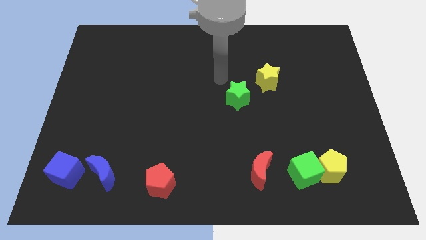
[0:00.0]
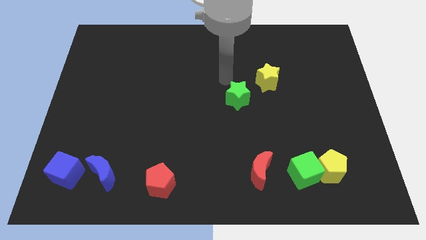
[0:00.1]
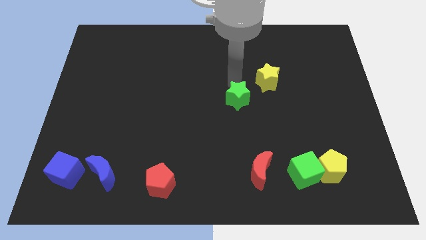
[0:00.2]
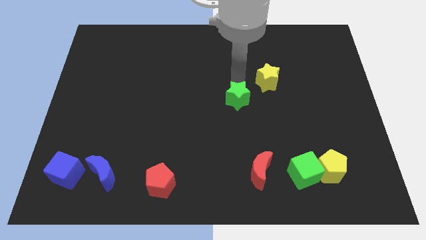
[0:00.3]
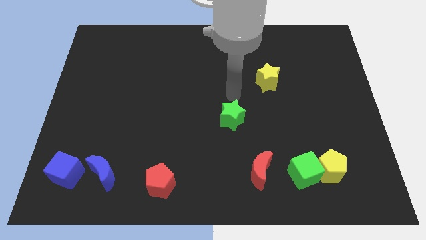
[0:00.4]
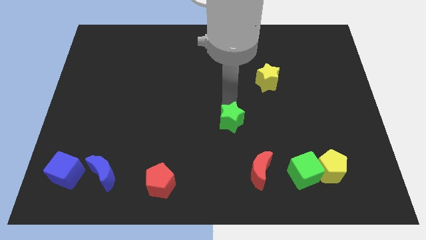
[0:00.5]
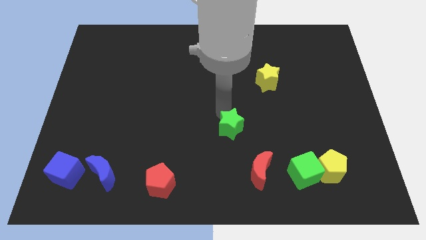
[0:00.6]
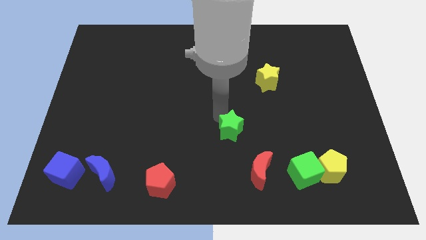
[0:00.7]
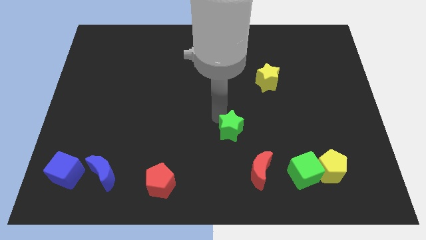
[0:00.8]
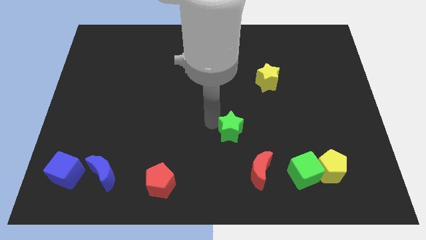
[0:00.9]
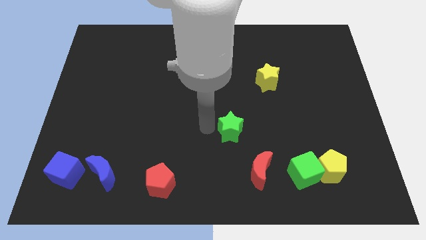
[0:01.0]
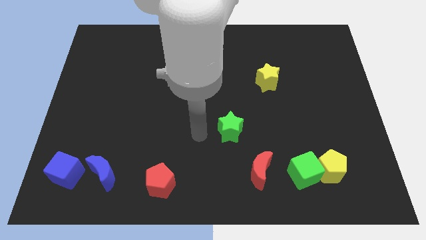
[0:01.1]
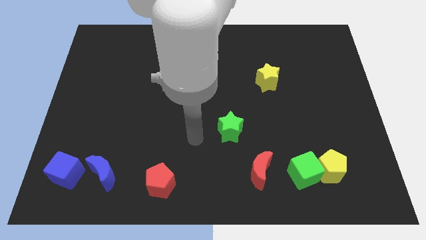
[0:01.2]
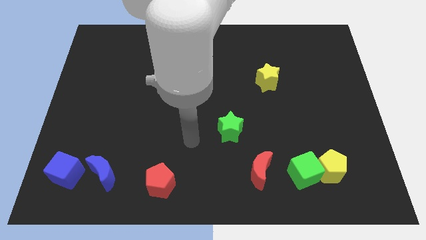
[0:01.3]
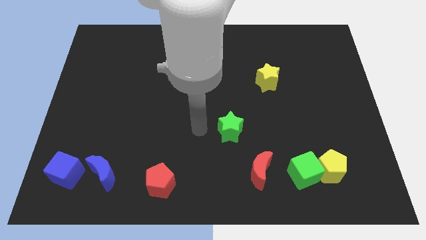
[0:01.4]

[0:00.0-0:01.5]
move the green star away from the yellow star

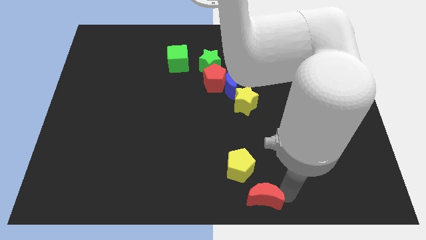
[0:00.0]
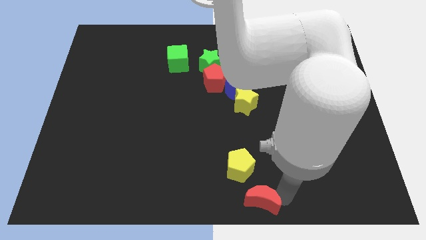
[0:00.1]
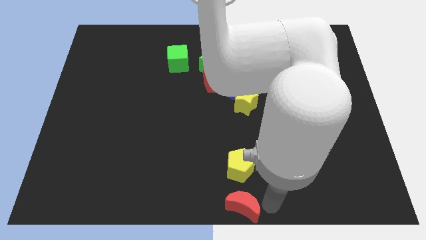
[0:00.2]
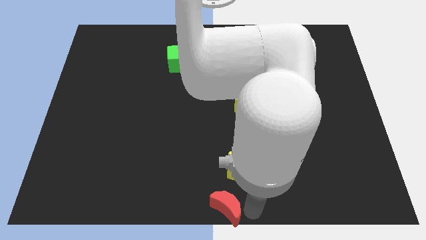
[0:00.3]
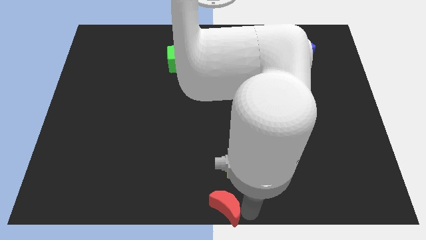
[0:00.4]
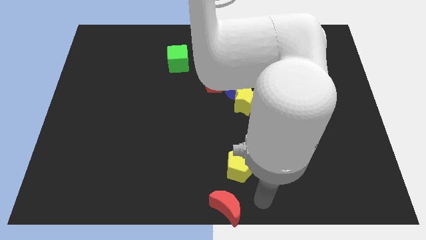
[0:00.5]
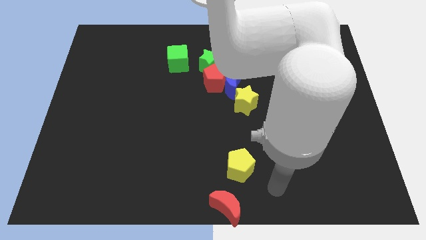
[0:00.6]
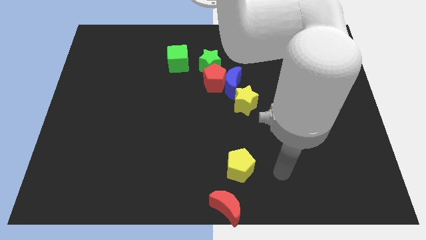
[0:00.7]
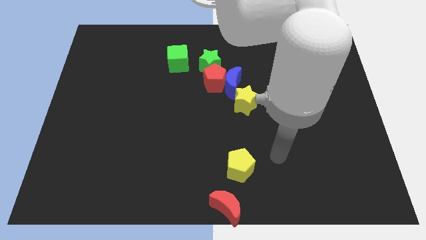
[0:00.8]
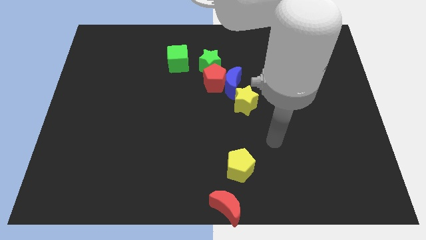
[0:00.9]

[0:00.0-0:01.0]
put the red moon at the bottom center of the board

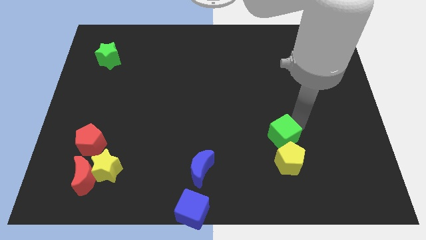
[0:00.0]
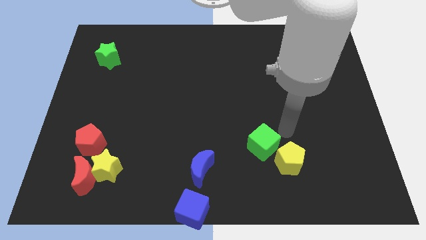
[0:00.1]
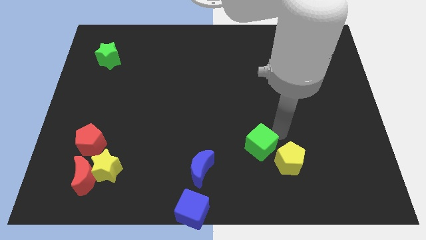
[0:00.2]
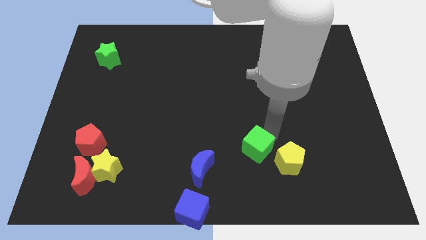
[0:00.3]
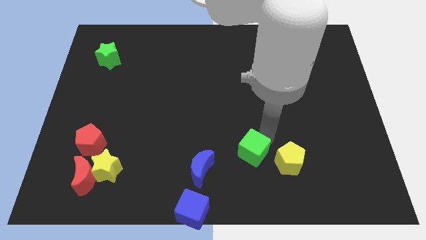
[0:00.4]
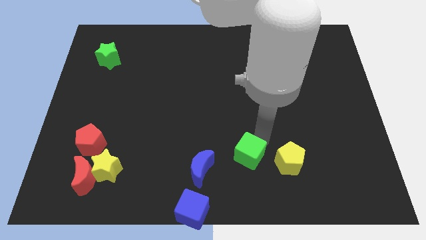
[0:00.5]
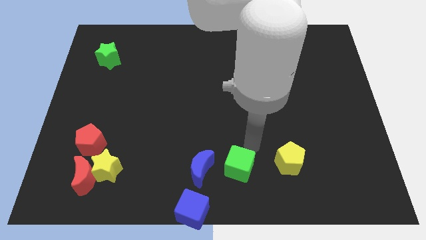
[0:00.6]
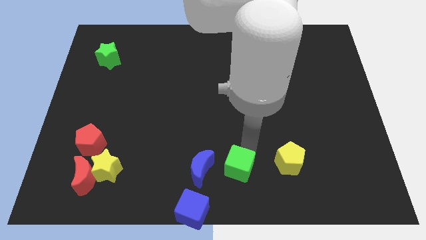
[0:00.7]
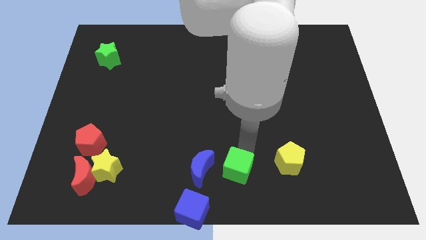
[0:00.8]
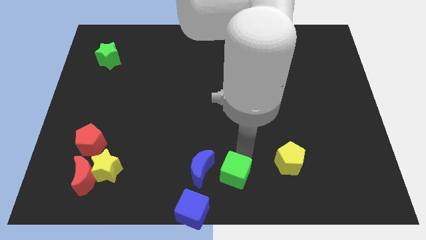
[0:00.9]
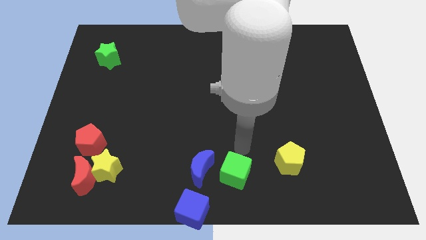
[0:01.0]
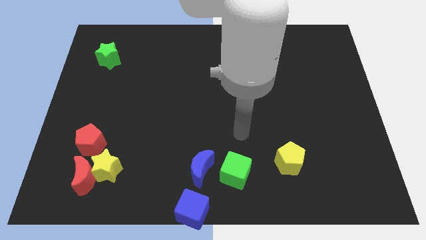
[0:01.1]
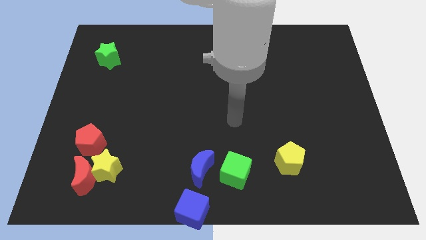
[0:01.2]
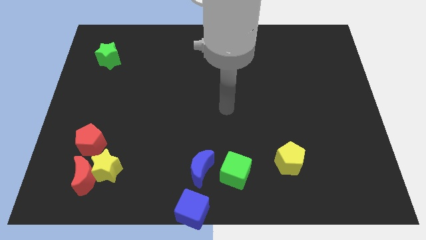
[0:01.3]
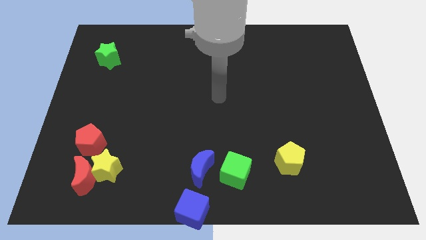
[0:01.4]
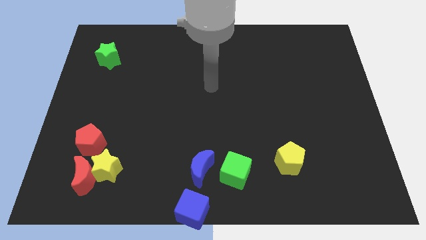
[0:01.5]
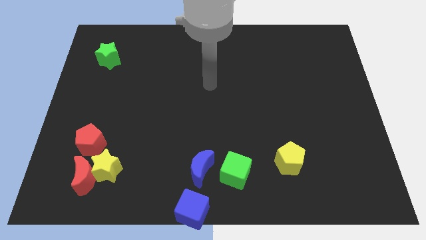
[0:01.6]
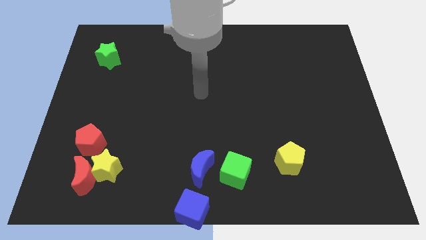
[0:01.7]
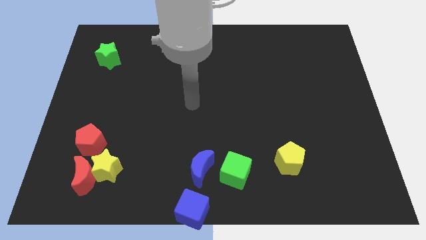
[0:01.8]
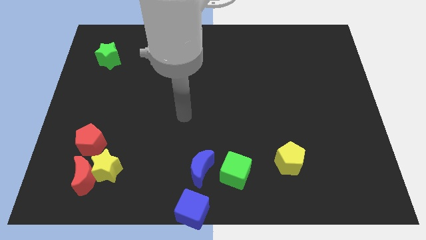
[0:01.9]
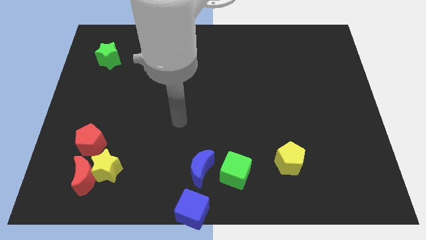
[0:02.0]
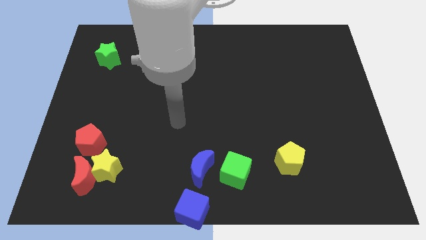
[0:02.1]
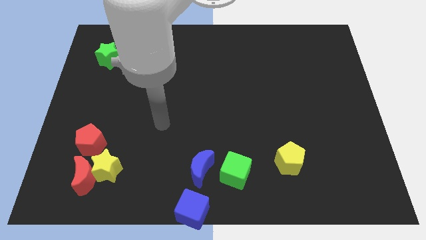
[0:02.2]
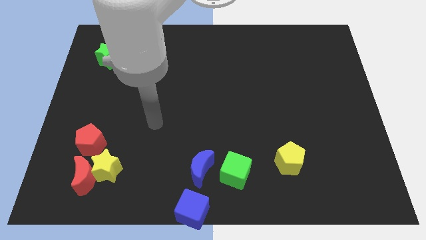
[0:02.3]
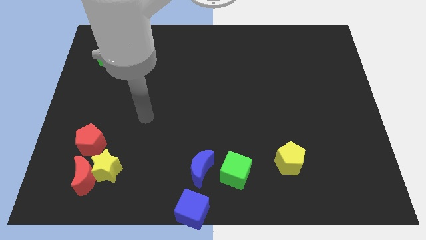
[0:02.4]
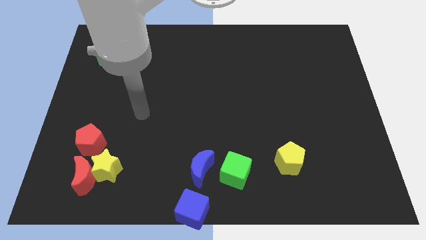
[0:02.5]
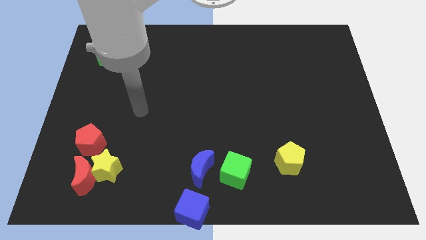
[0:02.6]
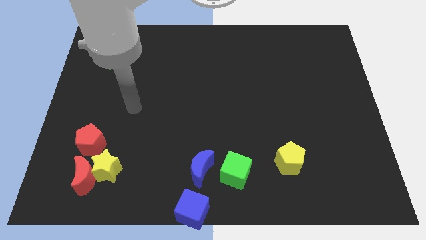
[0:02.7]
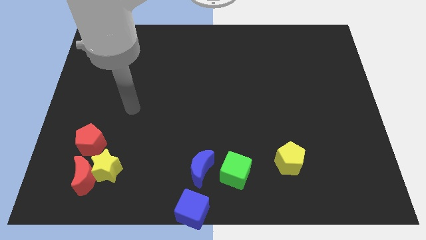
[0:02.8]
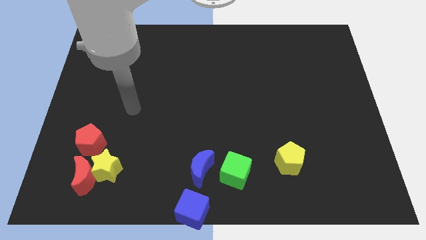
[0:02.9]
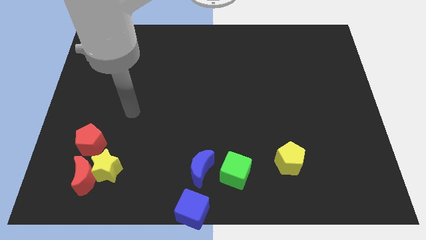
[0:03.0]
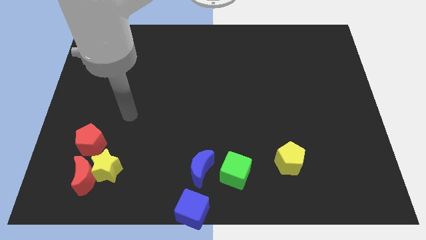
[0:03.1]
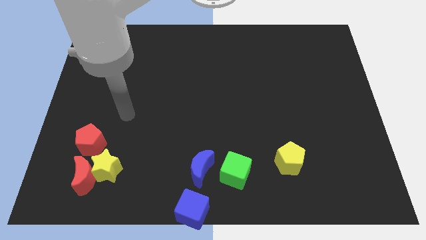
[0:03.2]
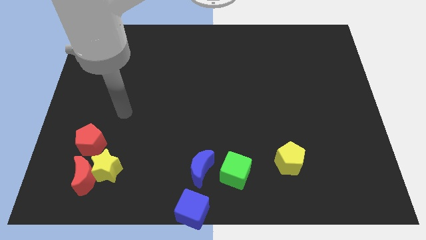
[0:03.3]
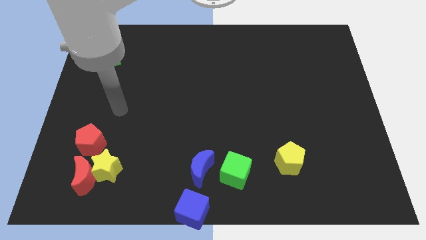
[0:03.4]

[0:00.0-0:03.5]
move the green cube right to the blue crescent

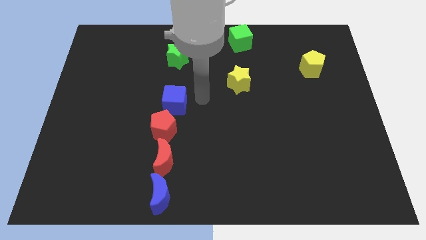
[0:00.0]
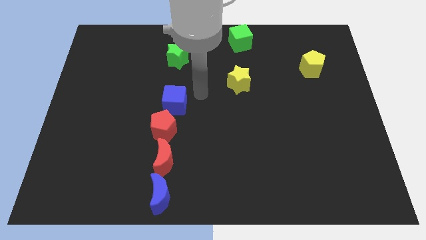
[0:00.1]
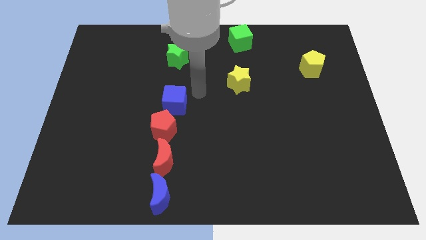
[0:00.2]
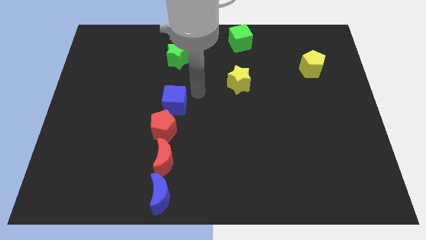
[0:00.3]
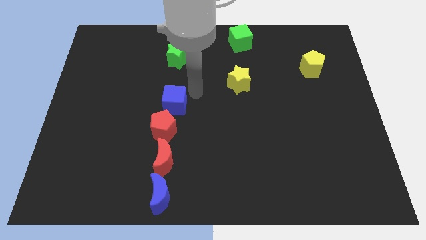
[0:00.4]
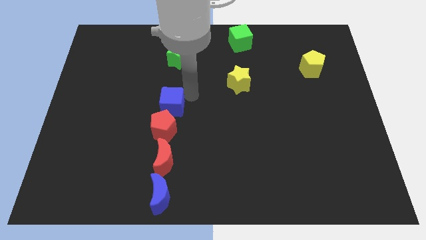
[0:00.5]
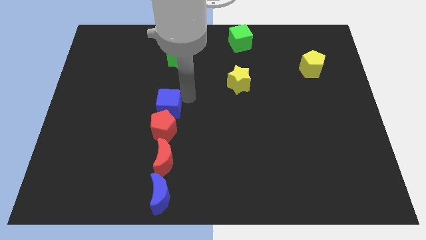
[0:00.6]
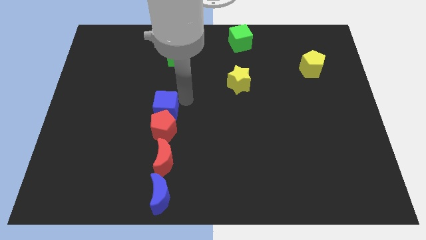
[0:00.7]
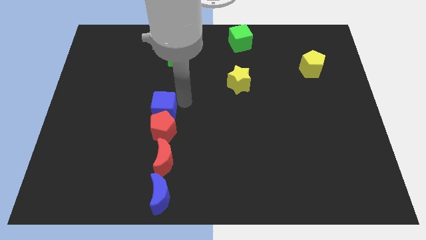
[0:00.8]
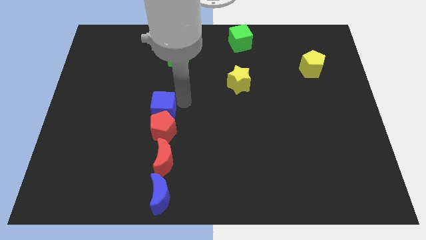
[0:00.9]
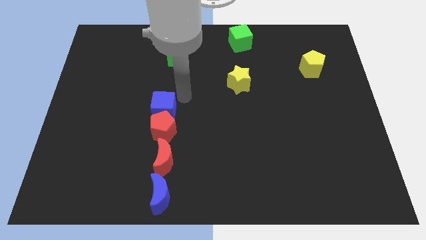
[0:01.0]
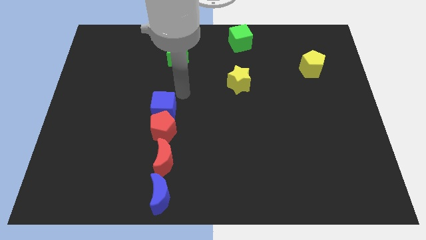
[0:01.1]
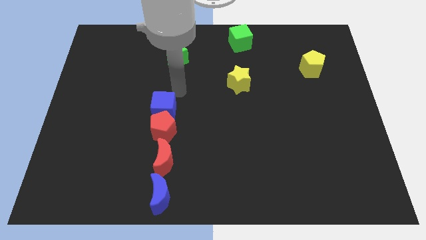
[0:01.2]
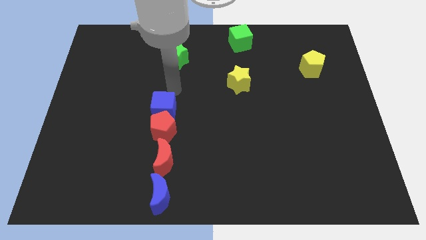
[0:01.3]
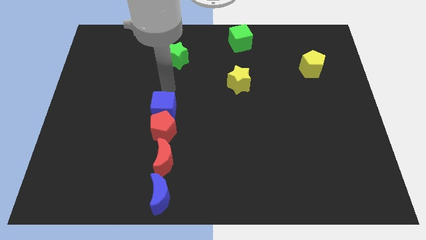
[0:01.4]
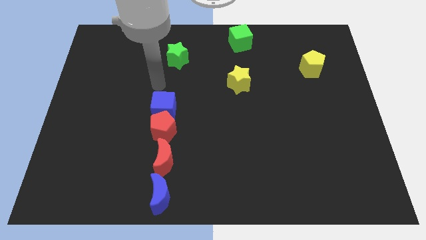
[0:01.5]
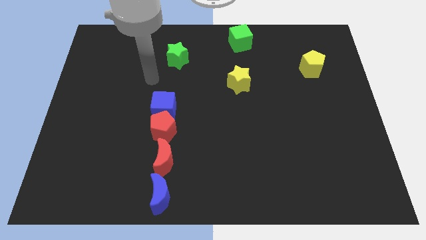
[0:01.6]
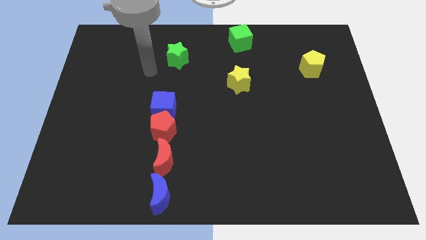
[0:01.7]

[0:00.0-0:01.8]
push blue cube close to red pentagon

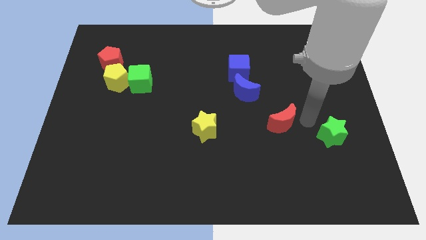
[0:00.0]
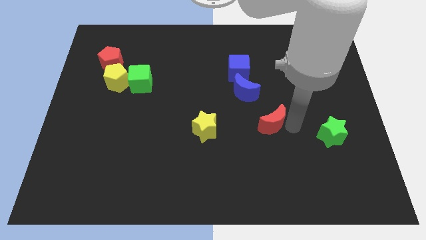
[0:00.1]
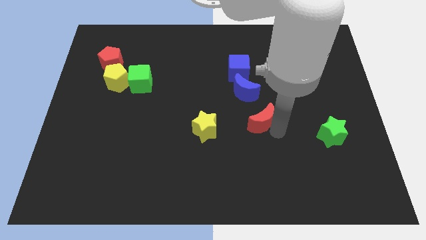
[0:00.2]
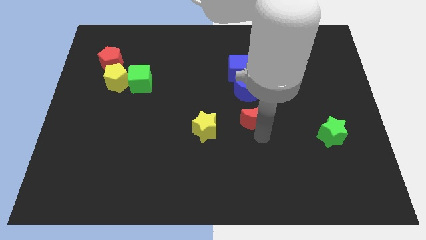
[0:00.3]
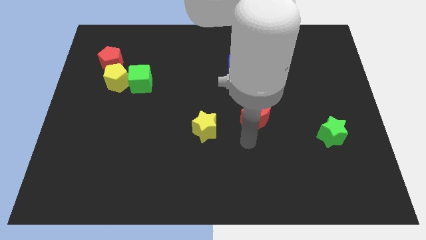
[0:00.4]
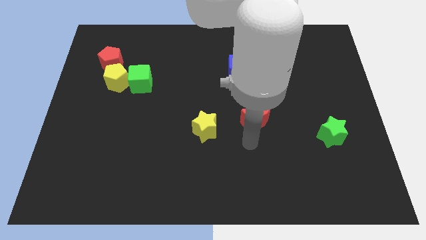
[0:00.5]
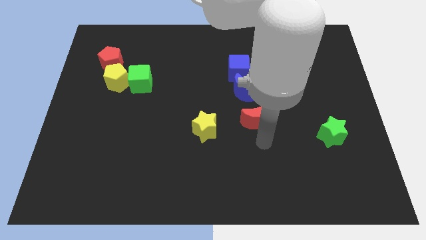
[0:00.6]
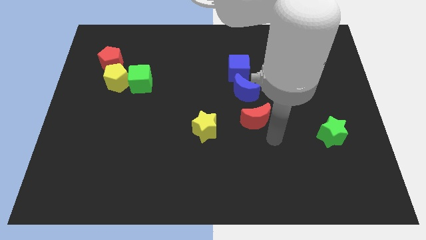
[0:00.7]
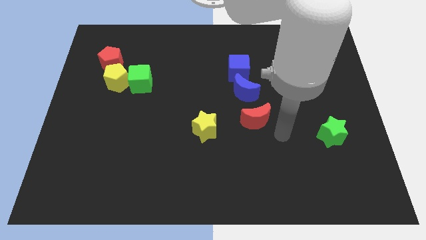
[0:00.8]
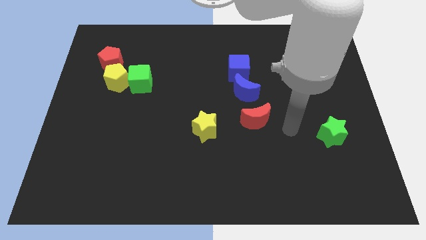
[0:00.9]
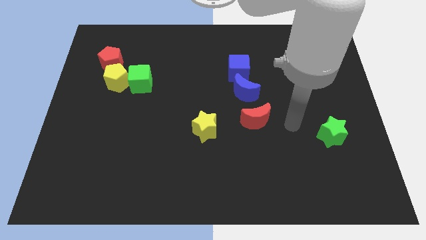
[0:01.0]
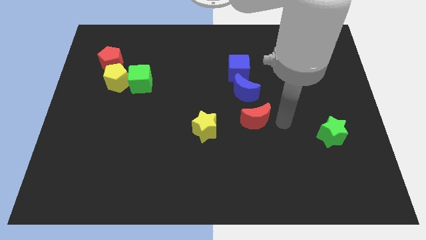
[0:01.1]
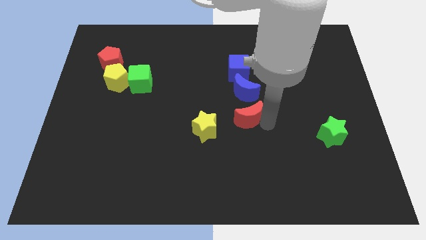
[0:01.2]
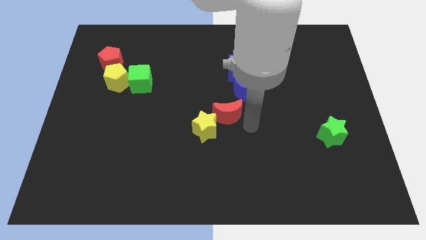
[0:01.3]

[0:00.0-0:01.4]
place the red crescent to the top right of the yellow star
